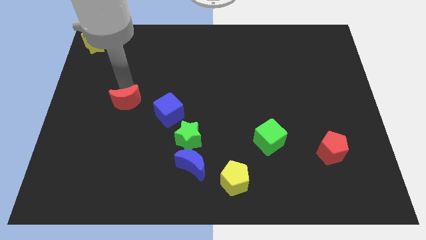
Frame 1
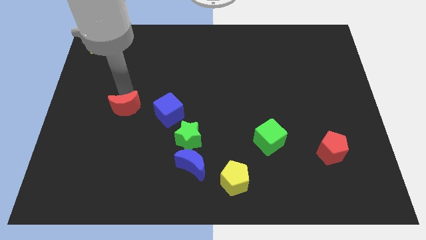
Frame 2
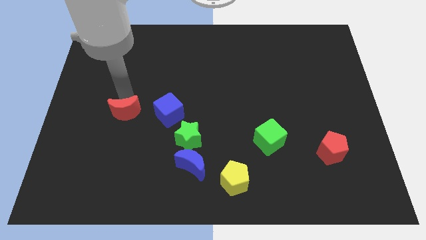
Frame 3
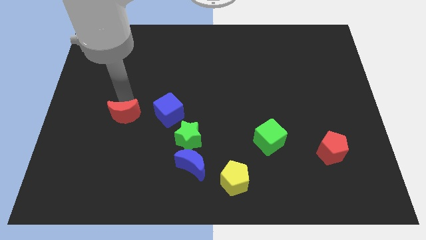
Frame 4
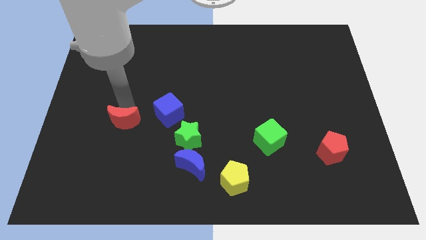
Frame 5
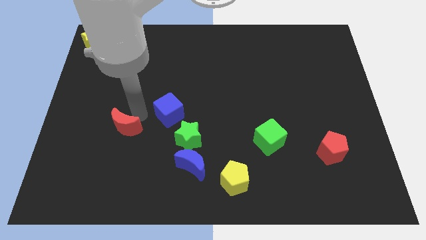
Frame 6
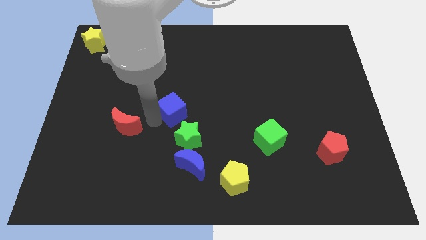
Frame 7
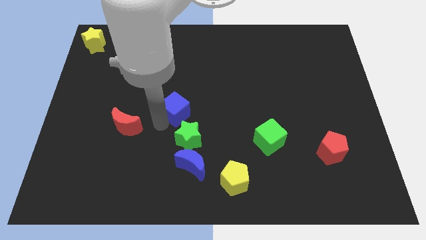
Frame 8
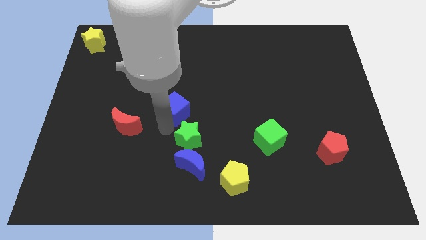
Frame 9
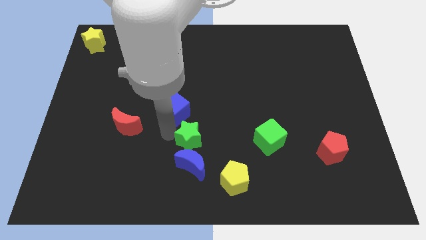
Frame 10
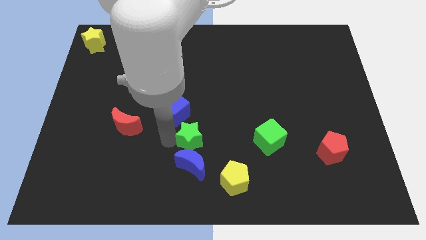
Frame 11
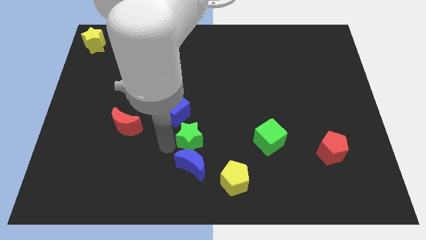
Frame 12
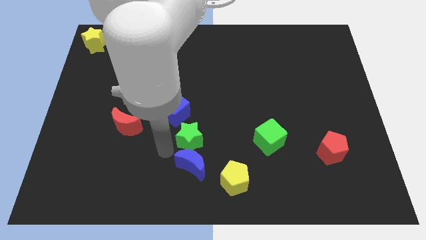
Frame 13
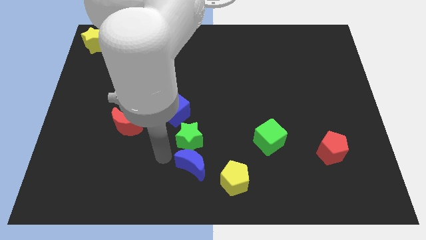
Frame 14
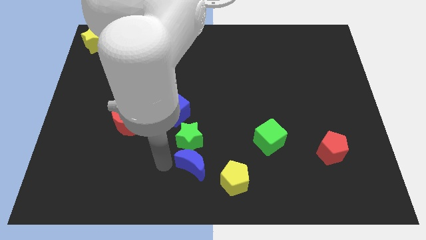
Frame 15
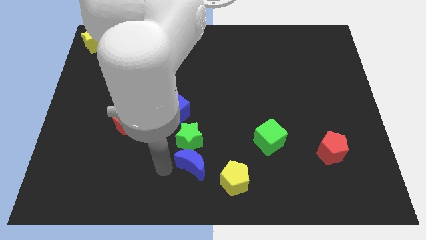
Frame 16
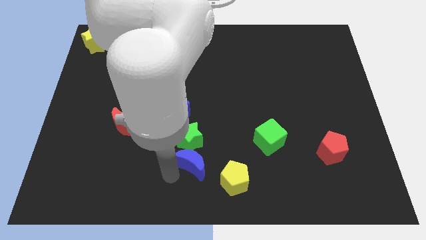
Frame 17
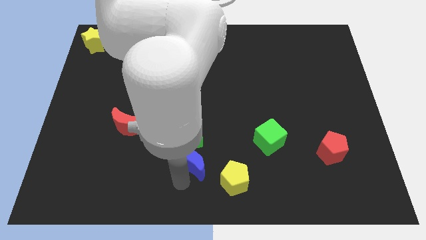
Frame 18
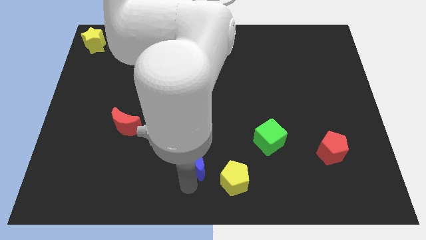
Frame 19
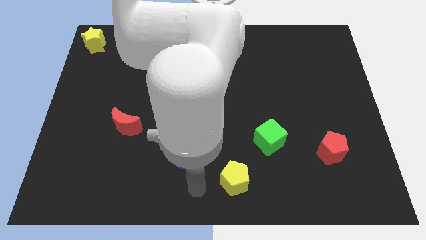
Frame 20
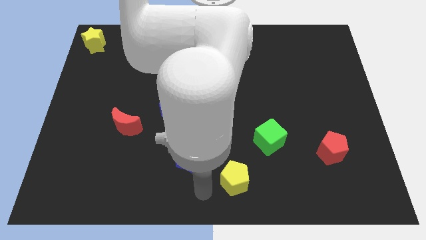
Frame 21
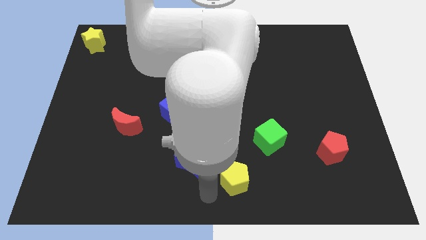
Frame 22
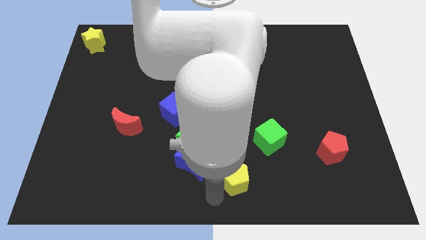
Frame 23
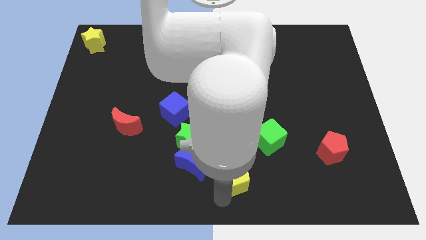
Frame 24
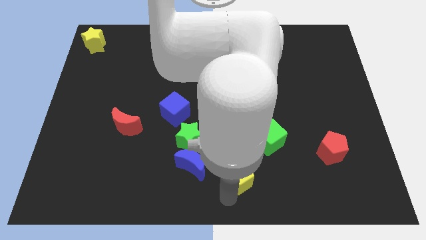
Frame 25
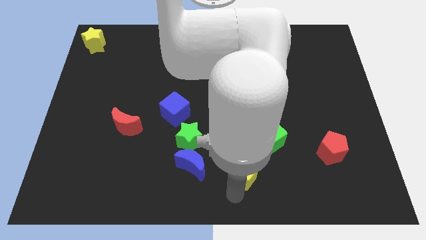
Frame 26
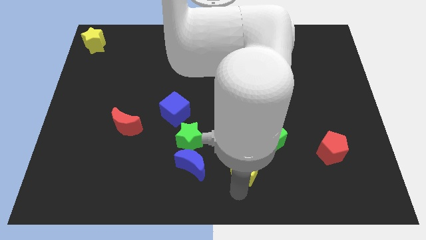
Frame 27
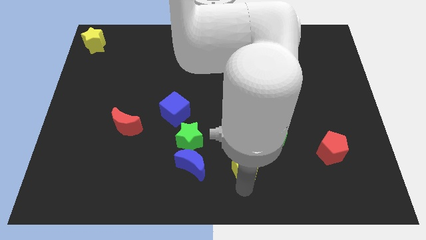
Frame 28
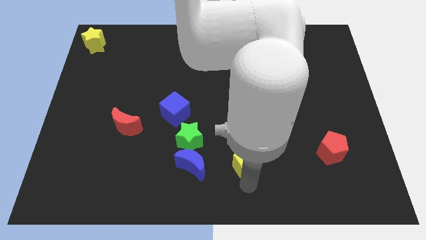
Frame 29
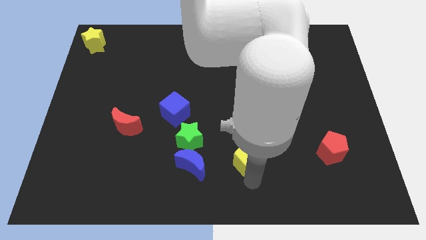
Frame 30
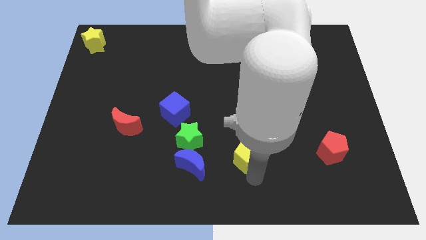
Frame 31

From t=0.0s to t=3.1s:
move your arm below to the yellow pentagon

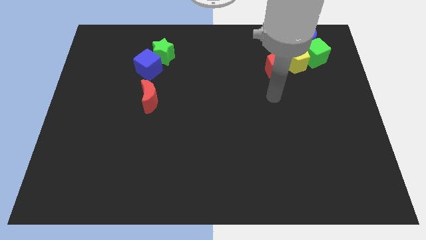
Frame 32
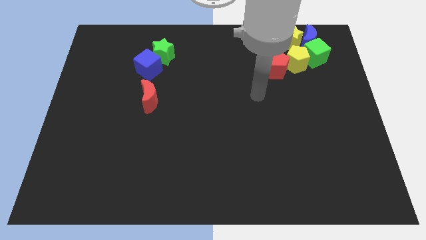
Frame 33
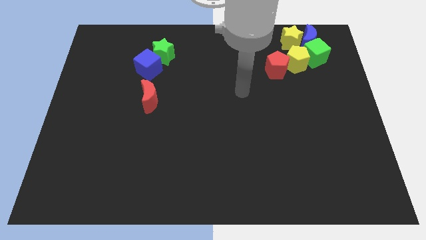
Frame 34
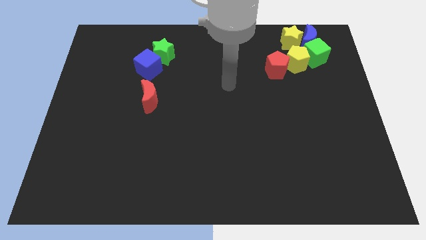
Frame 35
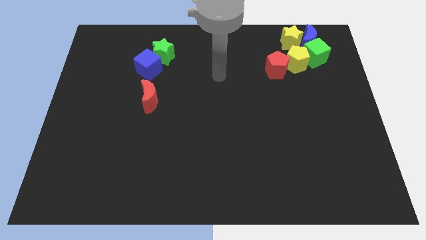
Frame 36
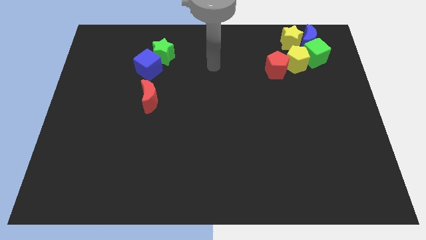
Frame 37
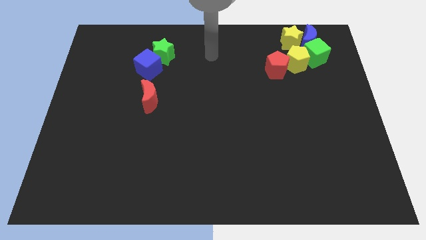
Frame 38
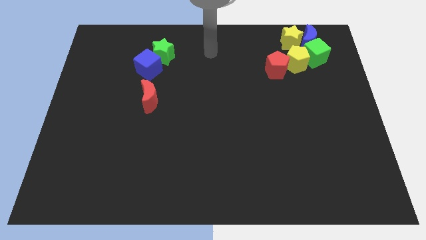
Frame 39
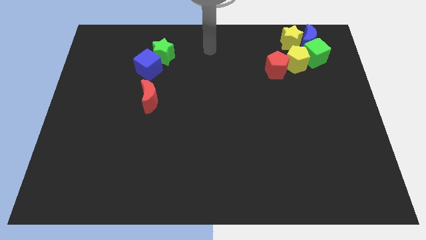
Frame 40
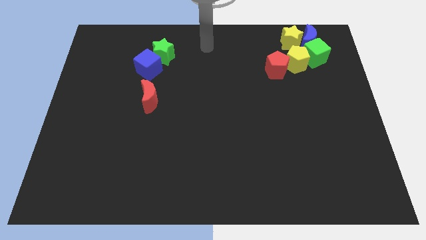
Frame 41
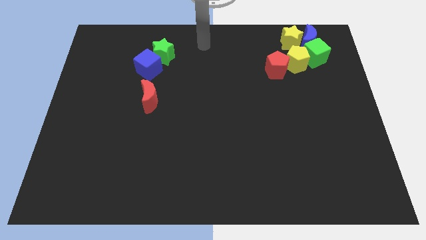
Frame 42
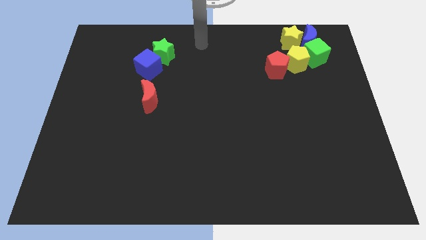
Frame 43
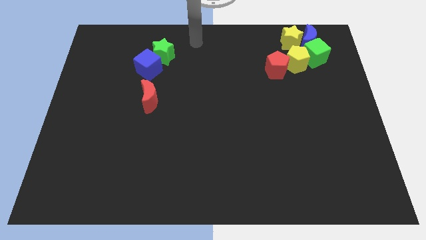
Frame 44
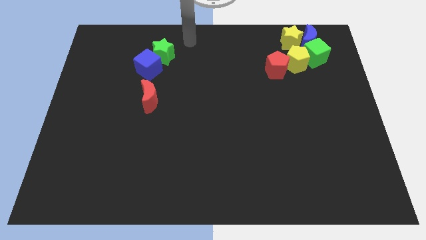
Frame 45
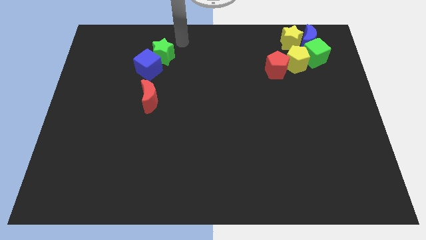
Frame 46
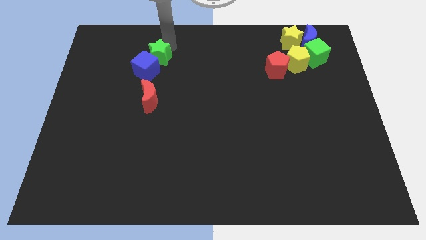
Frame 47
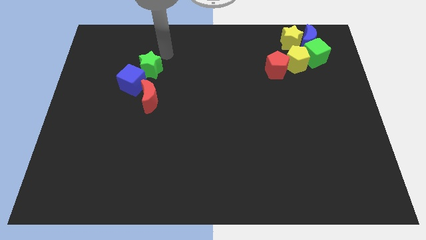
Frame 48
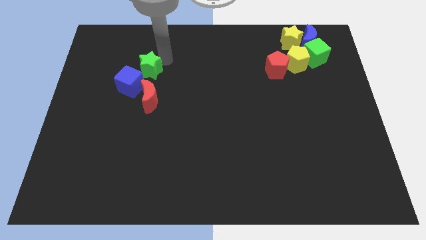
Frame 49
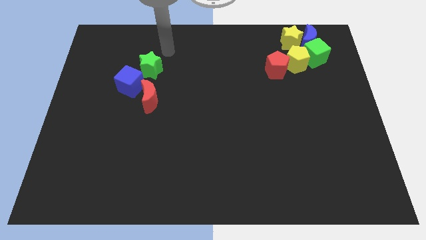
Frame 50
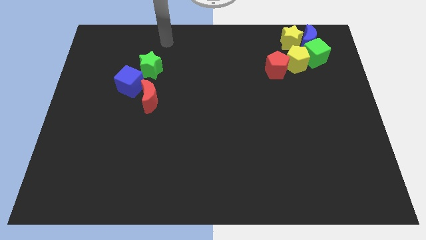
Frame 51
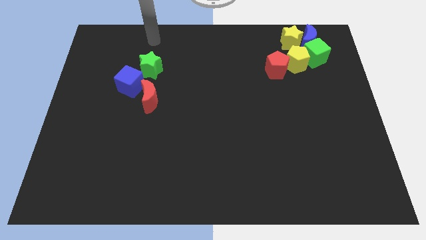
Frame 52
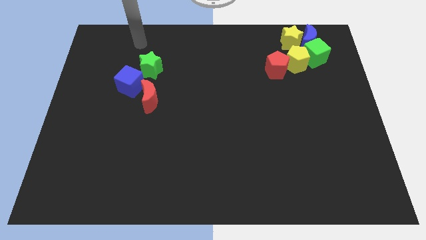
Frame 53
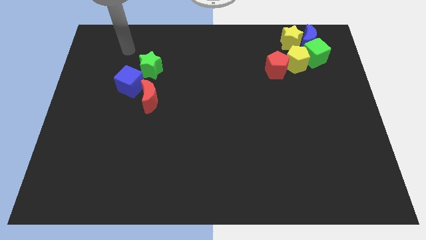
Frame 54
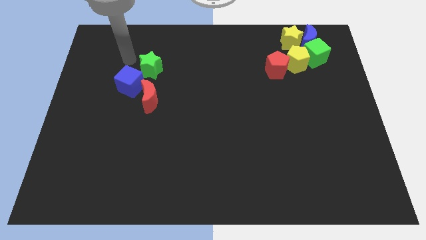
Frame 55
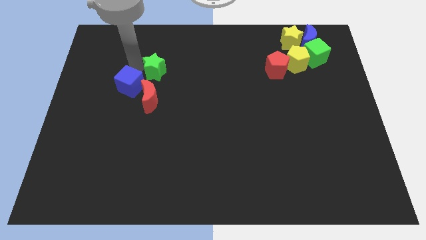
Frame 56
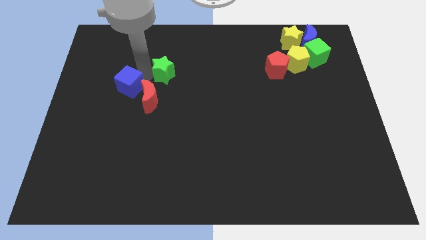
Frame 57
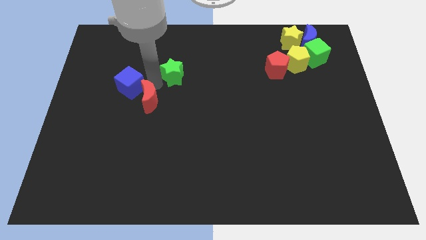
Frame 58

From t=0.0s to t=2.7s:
move the green star to the top rightof the red crescent

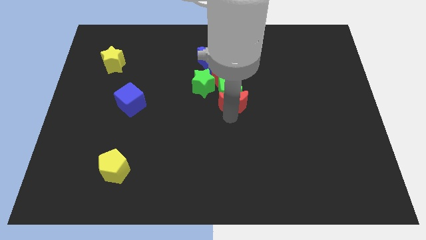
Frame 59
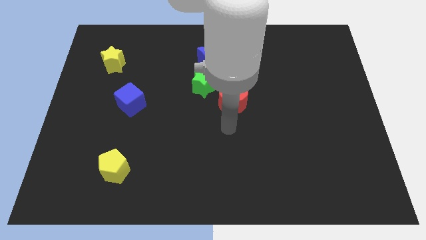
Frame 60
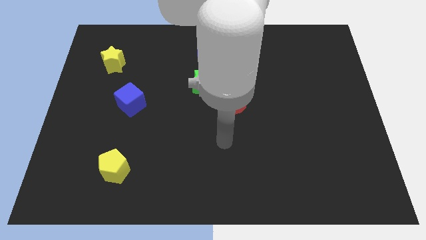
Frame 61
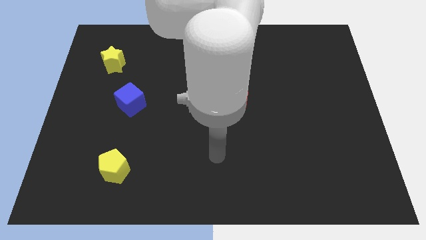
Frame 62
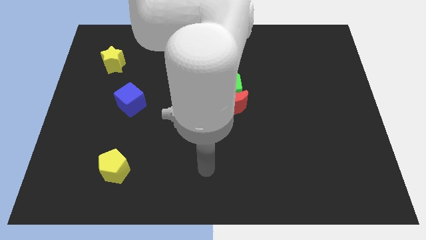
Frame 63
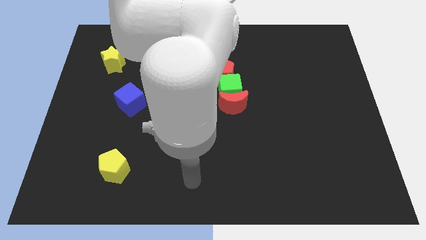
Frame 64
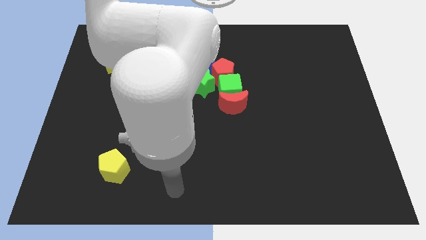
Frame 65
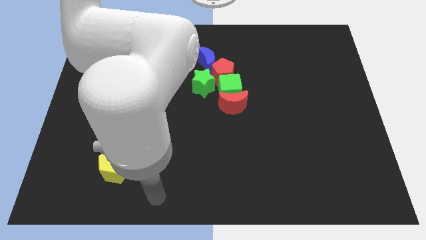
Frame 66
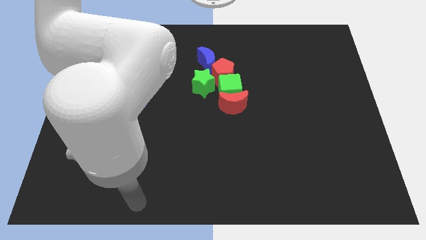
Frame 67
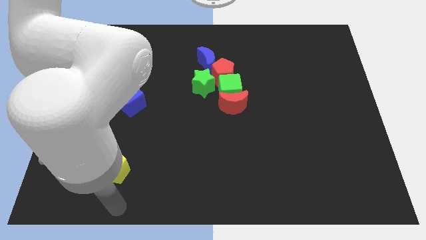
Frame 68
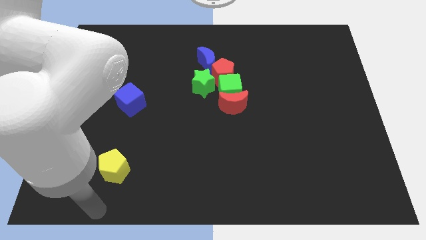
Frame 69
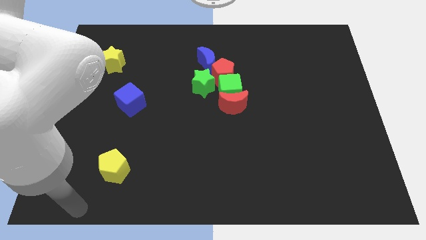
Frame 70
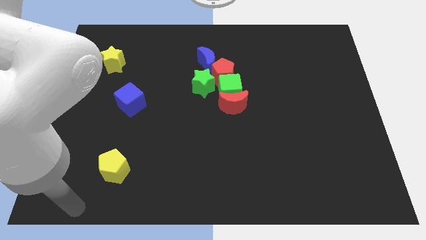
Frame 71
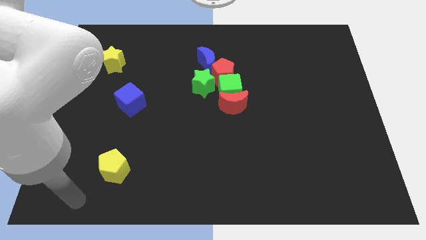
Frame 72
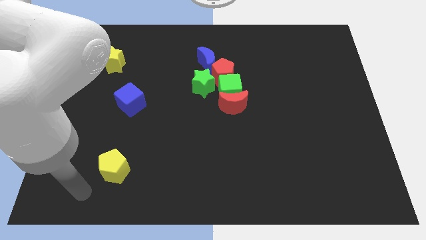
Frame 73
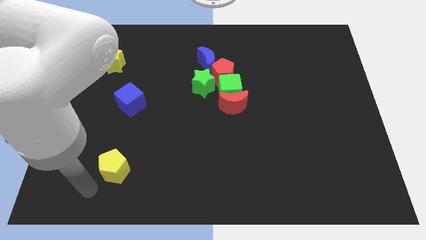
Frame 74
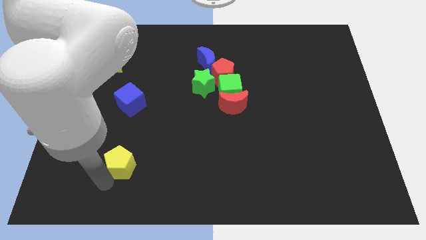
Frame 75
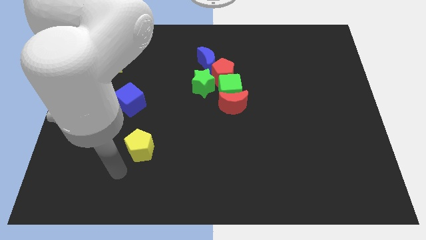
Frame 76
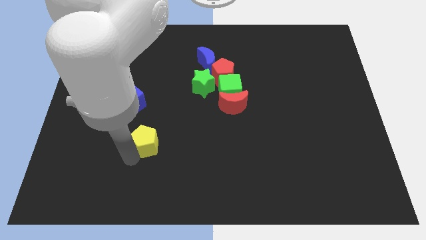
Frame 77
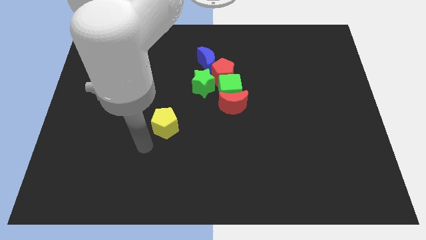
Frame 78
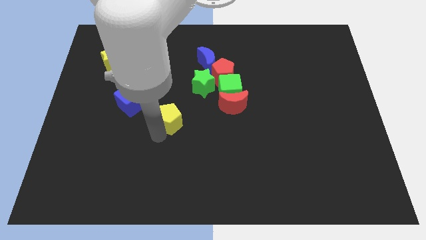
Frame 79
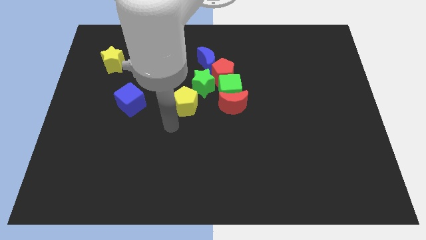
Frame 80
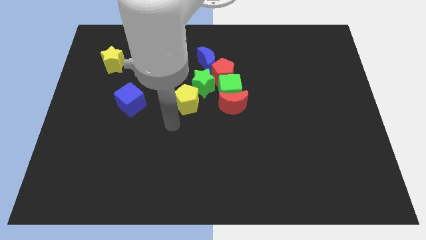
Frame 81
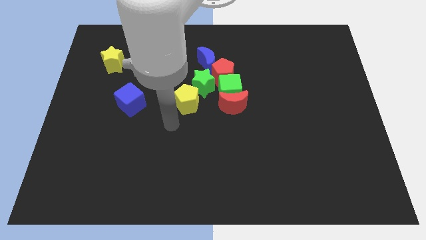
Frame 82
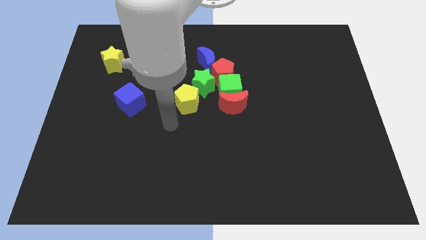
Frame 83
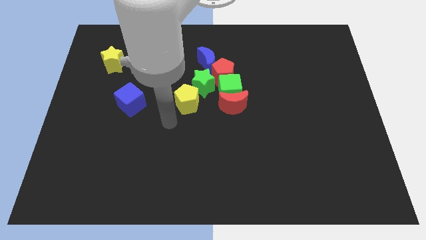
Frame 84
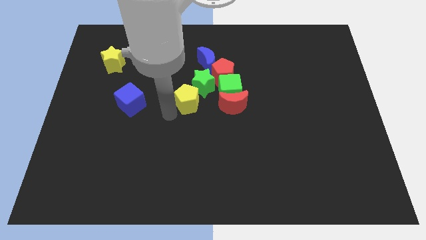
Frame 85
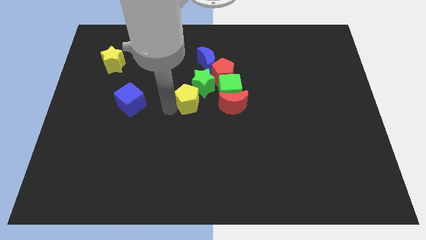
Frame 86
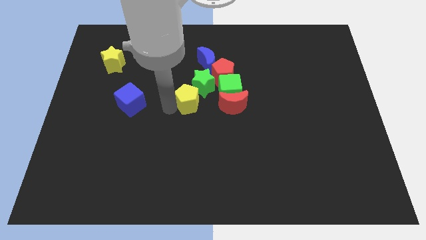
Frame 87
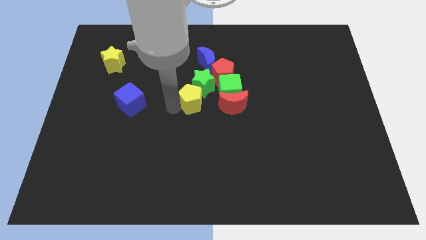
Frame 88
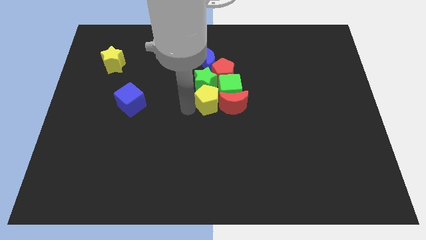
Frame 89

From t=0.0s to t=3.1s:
place the yellow pentagon below the green star

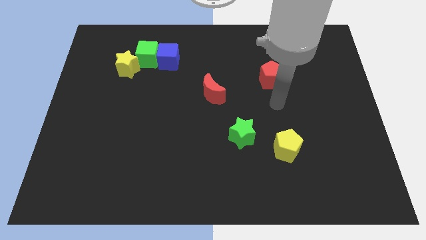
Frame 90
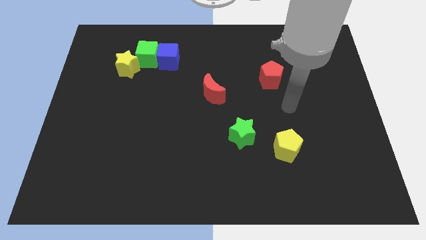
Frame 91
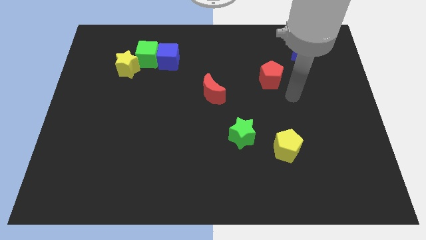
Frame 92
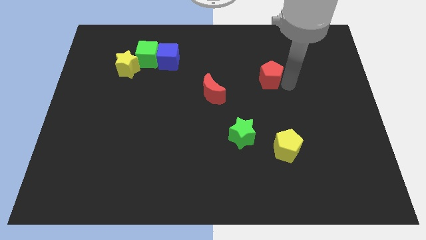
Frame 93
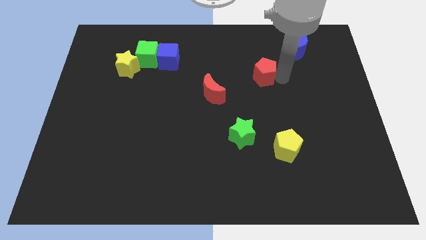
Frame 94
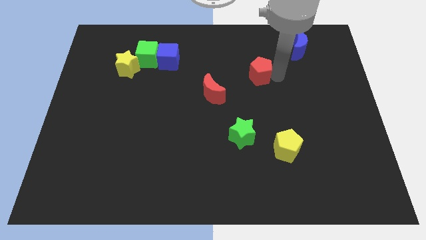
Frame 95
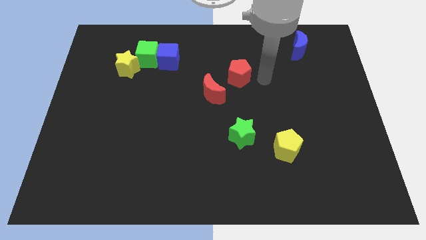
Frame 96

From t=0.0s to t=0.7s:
move red pentagon above green star
